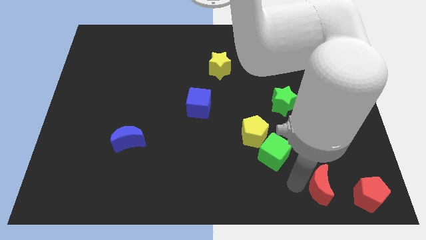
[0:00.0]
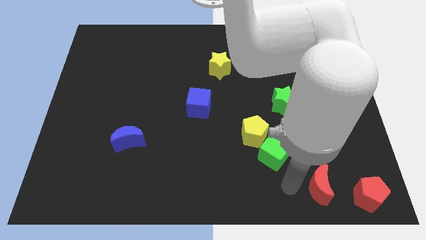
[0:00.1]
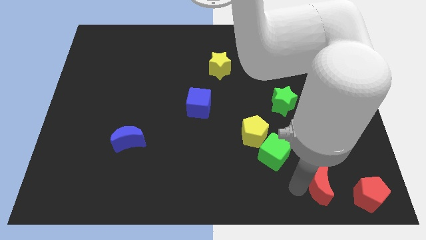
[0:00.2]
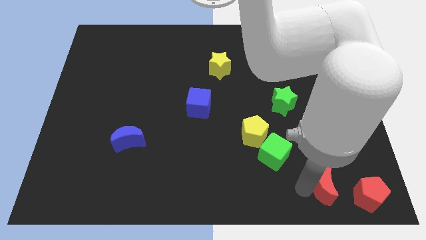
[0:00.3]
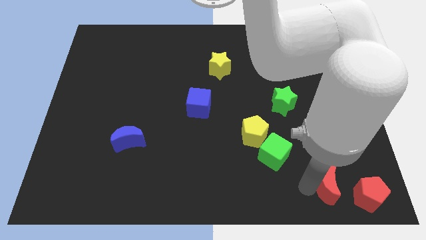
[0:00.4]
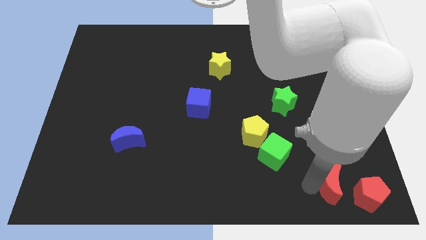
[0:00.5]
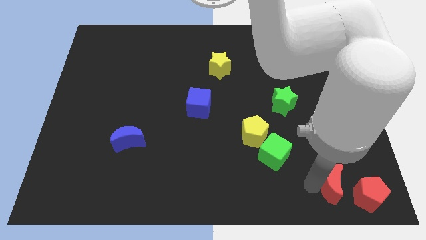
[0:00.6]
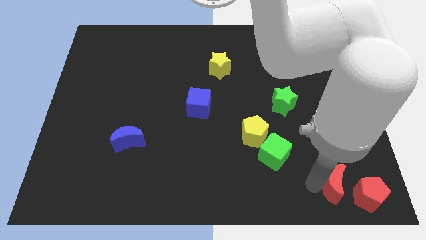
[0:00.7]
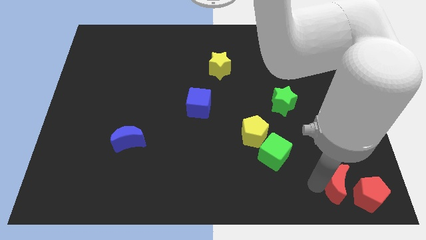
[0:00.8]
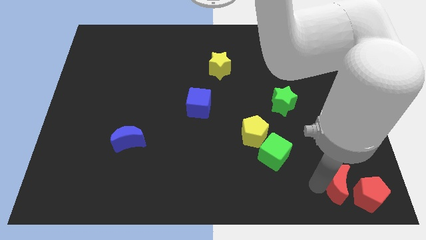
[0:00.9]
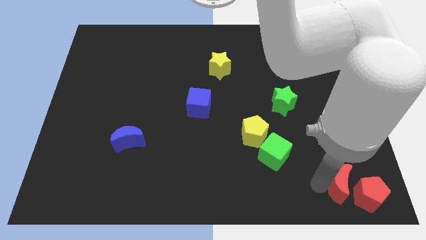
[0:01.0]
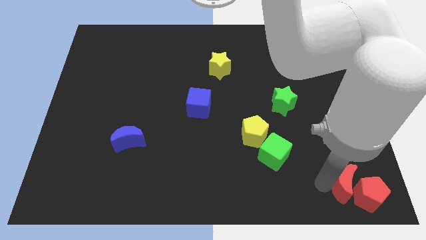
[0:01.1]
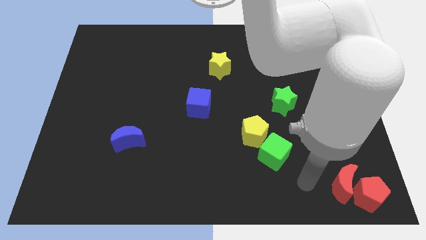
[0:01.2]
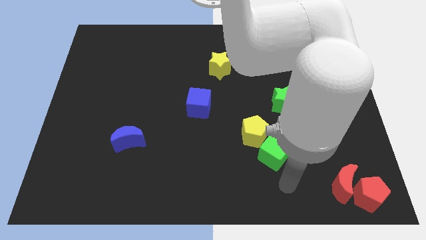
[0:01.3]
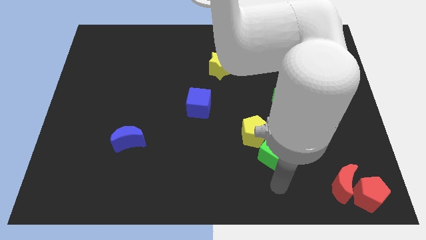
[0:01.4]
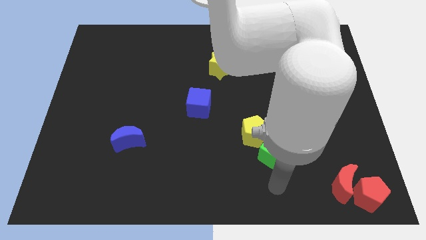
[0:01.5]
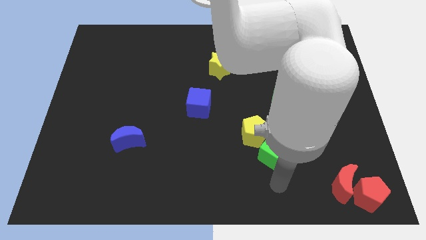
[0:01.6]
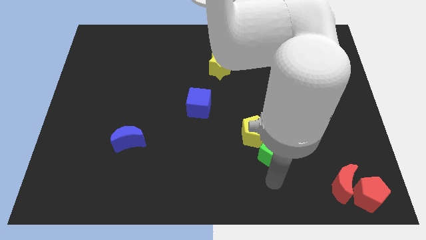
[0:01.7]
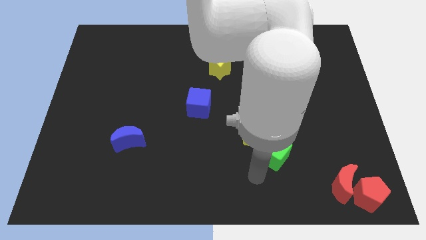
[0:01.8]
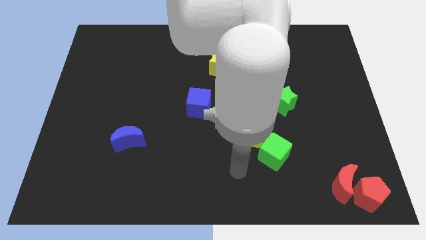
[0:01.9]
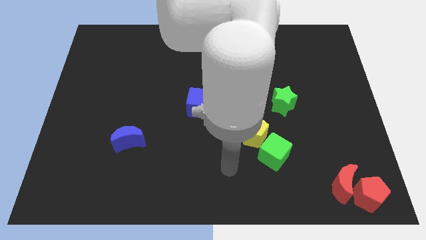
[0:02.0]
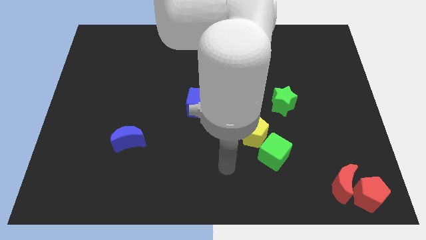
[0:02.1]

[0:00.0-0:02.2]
push red moon into red pentagon

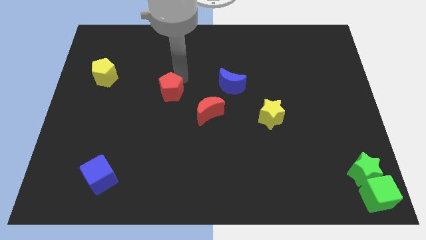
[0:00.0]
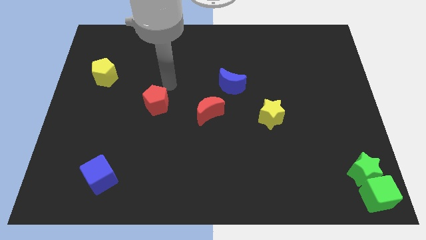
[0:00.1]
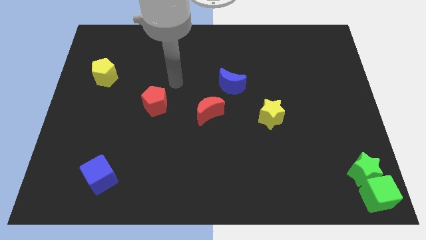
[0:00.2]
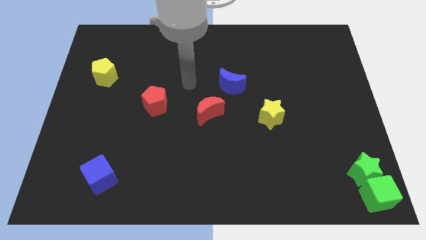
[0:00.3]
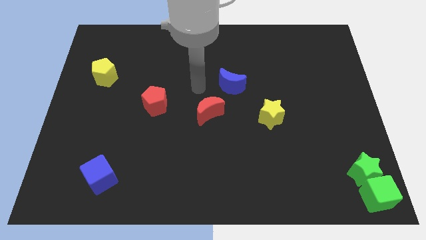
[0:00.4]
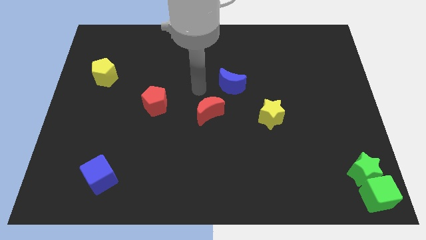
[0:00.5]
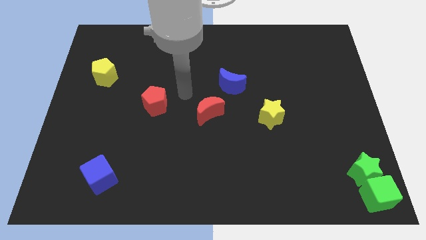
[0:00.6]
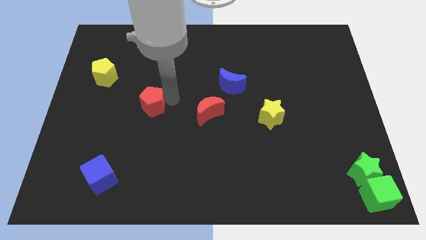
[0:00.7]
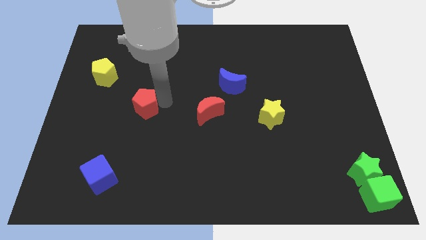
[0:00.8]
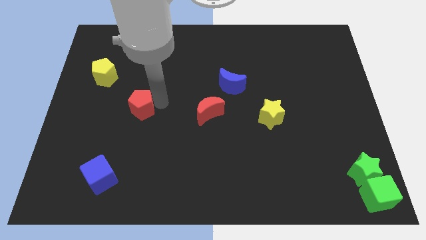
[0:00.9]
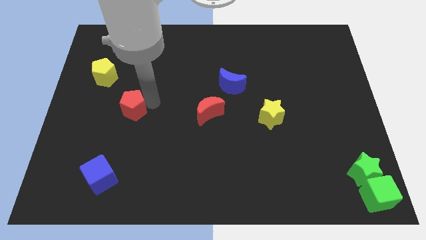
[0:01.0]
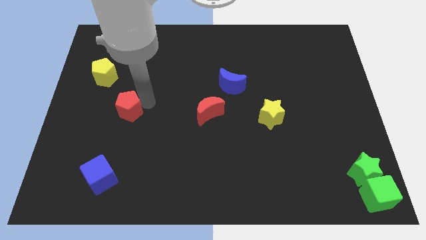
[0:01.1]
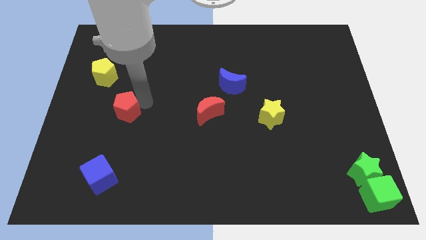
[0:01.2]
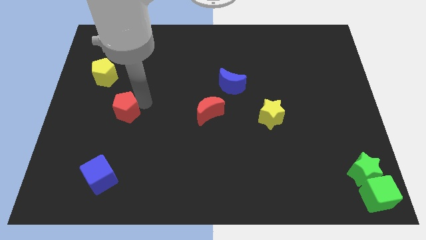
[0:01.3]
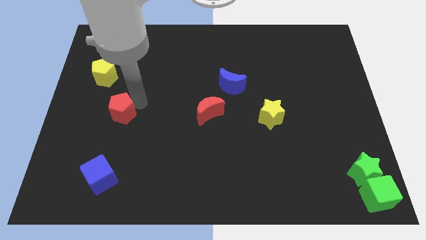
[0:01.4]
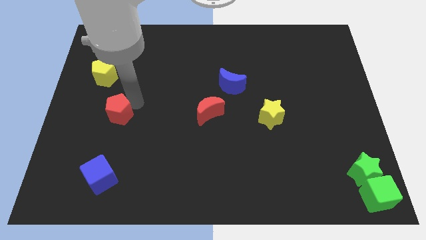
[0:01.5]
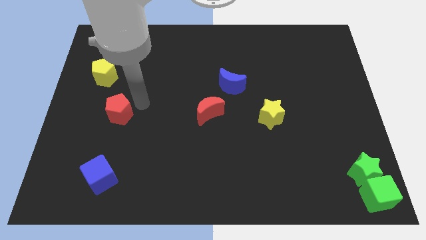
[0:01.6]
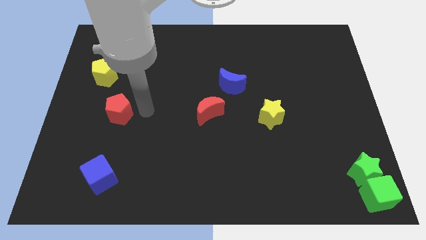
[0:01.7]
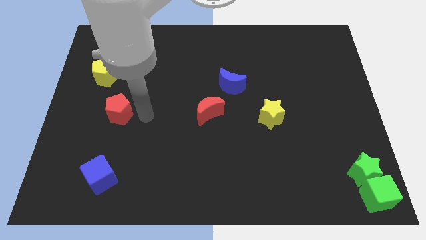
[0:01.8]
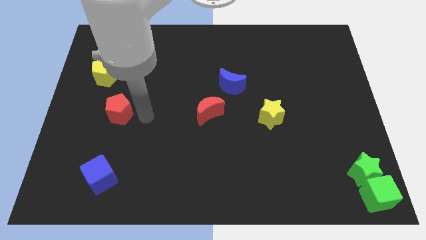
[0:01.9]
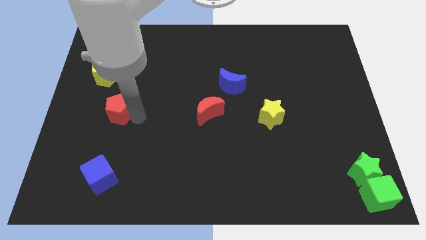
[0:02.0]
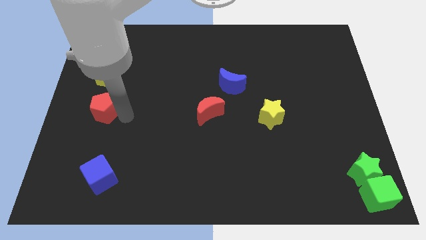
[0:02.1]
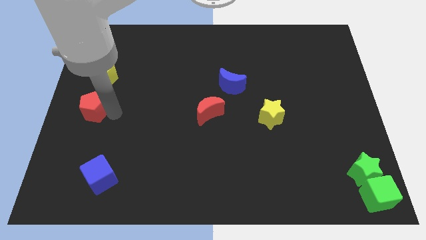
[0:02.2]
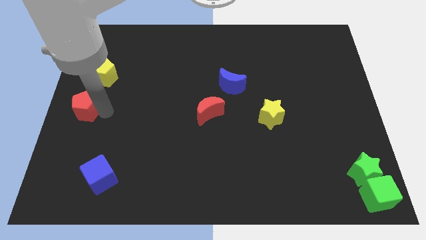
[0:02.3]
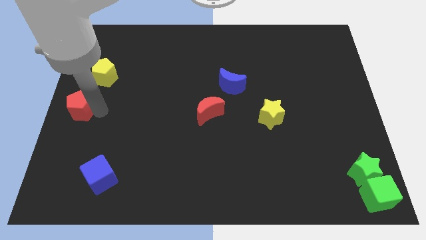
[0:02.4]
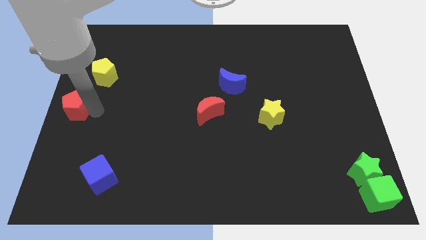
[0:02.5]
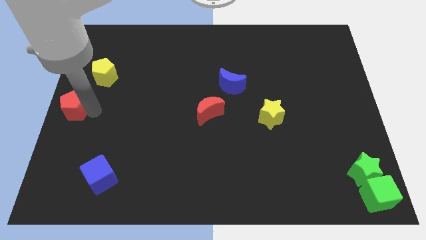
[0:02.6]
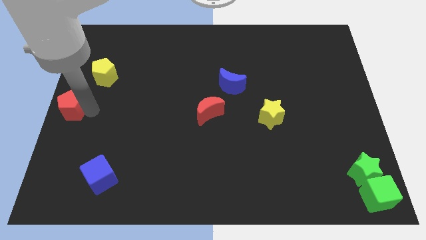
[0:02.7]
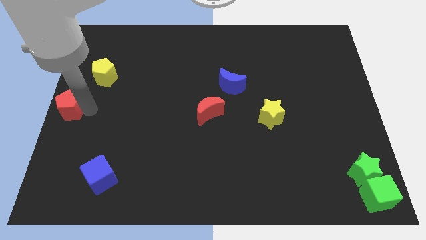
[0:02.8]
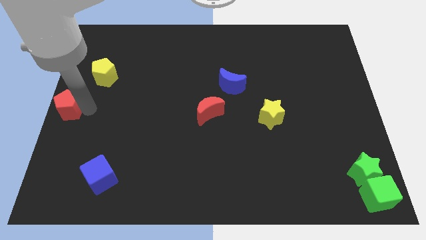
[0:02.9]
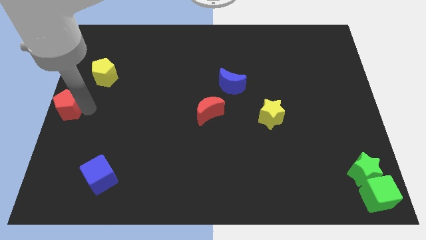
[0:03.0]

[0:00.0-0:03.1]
place the red pentagon diagonal to the yellow pentagon

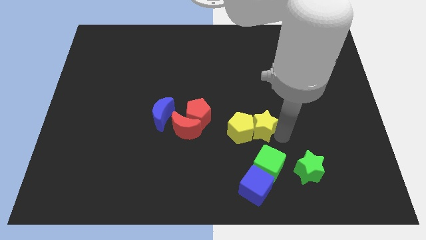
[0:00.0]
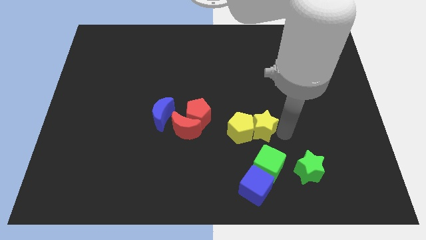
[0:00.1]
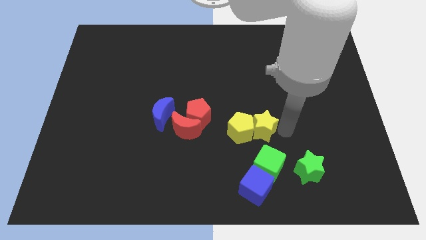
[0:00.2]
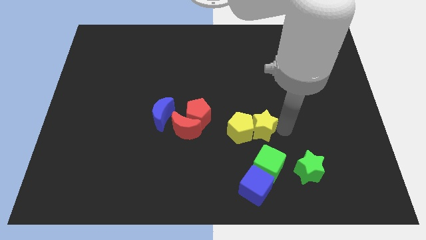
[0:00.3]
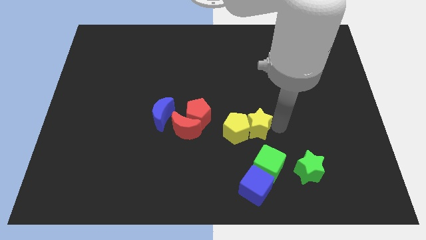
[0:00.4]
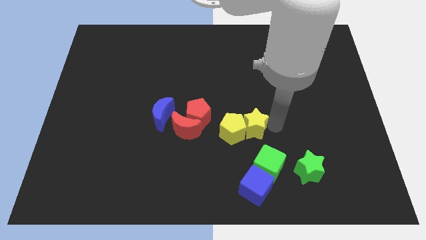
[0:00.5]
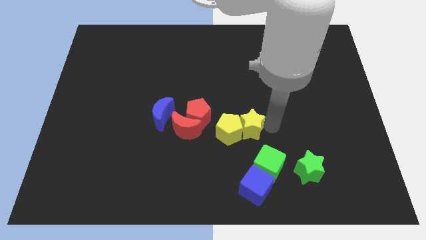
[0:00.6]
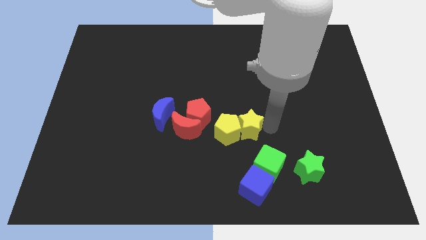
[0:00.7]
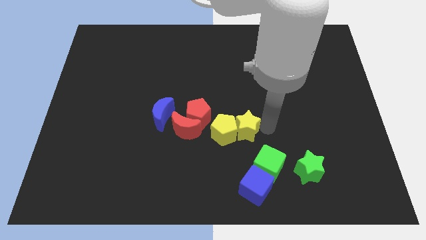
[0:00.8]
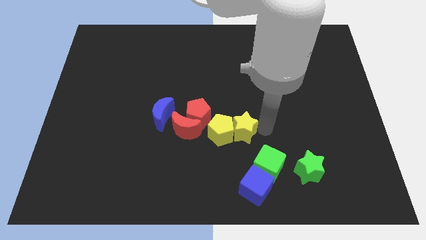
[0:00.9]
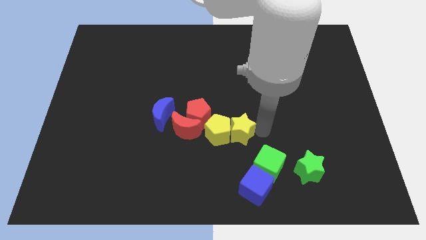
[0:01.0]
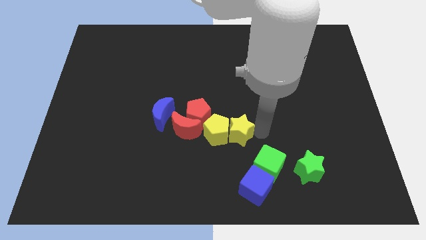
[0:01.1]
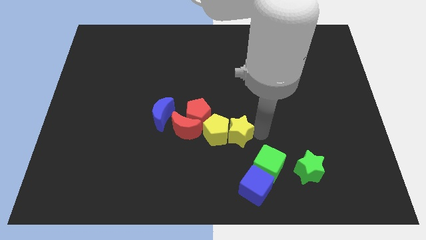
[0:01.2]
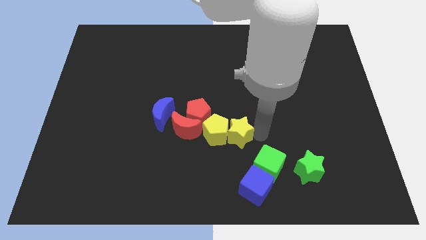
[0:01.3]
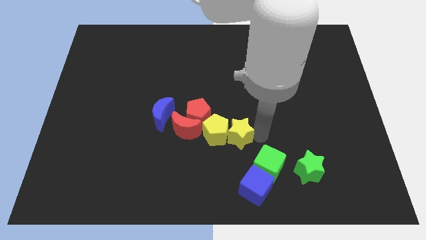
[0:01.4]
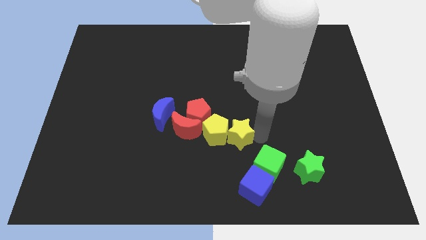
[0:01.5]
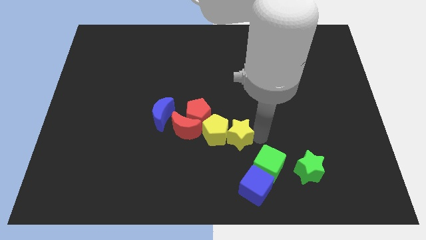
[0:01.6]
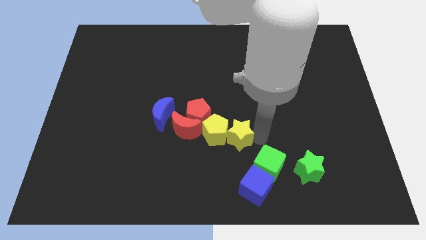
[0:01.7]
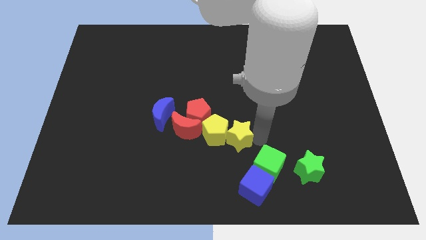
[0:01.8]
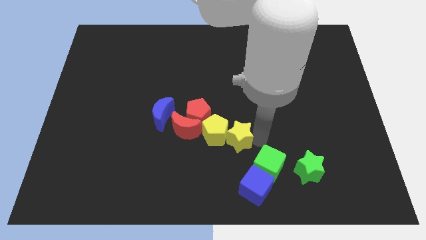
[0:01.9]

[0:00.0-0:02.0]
push the yellow pentagon with the yellow star into the red crescent

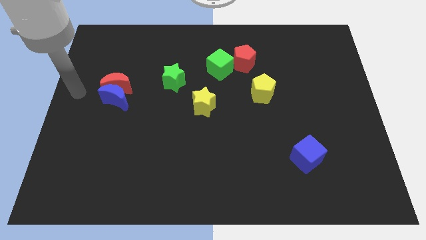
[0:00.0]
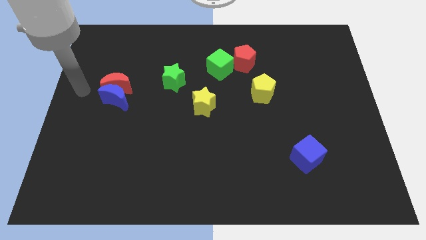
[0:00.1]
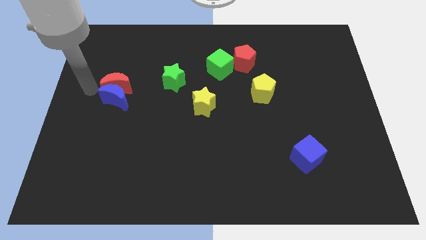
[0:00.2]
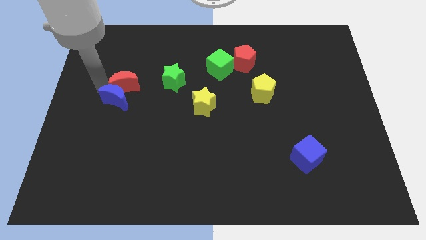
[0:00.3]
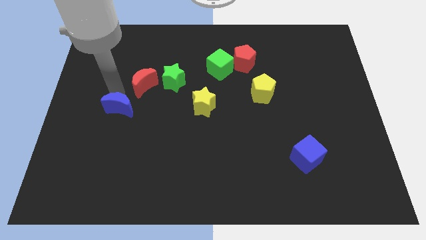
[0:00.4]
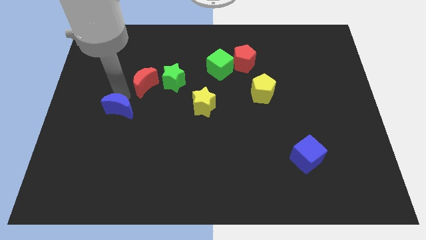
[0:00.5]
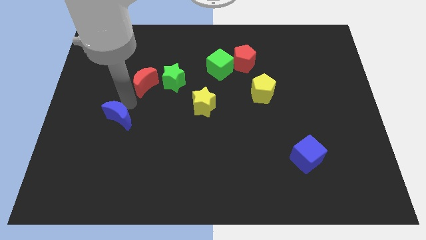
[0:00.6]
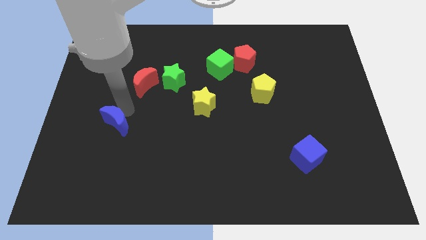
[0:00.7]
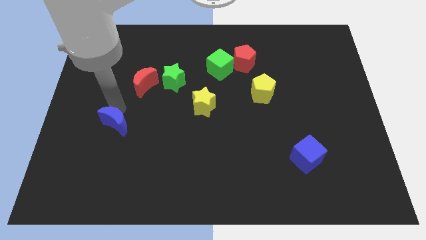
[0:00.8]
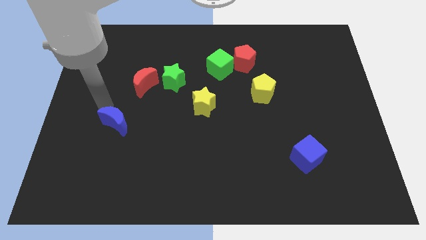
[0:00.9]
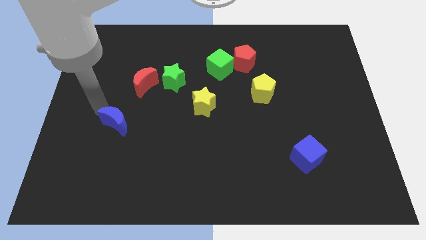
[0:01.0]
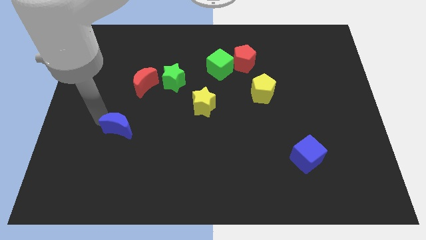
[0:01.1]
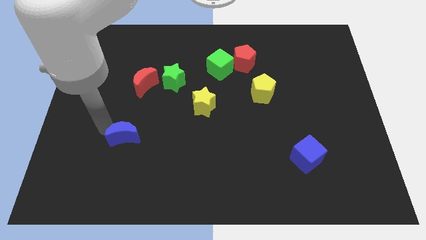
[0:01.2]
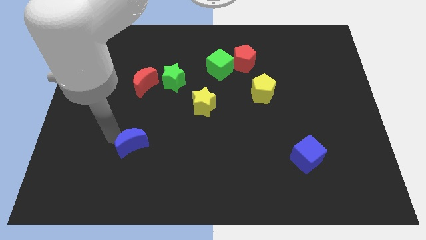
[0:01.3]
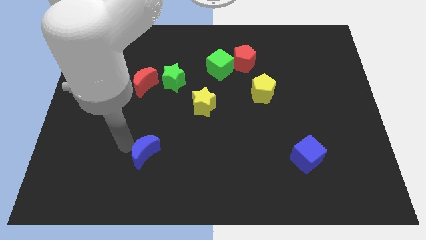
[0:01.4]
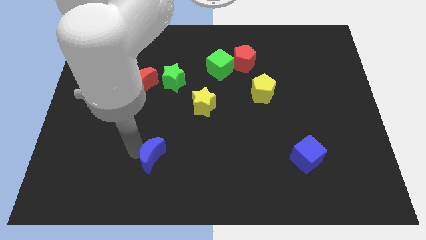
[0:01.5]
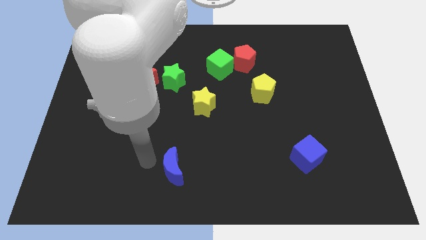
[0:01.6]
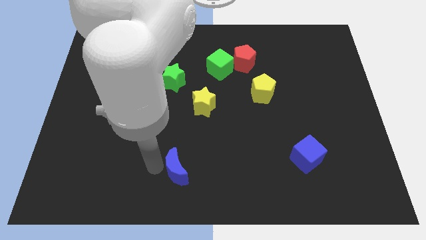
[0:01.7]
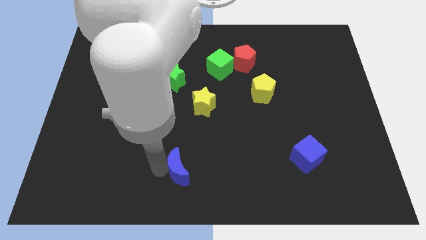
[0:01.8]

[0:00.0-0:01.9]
move the blue crescent towards the bottom center of the board
